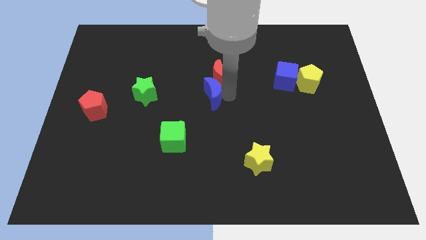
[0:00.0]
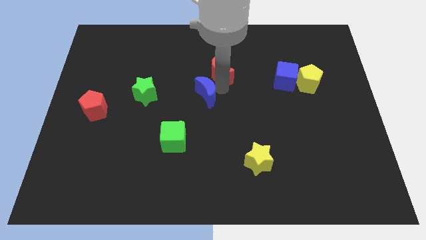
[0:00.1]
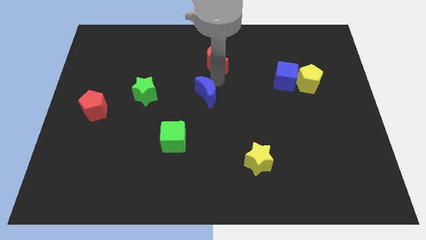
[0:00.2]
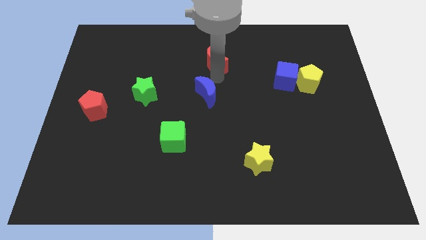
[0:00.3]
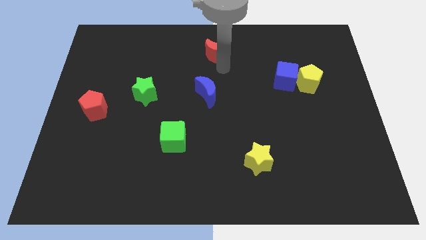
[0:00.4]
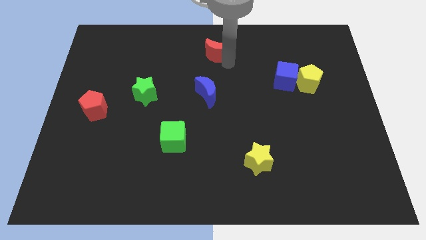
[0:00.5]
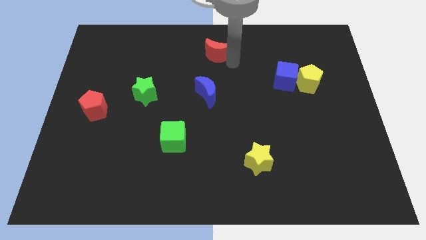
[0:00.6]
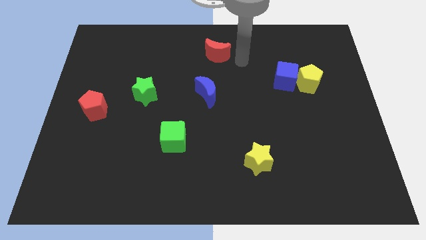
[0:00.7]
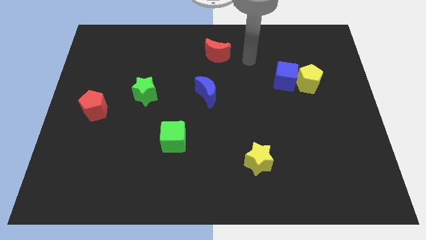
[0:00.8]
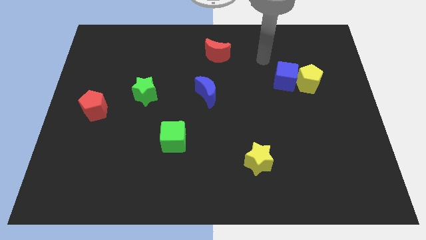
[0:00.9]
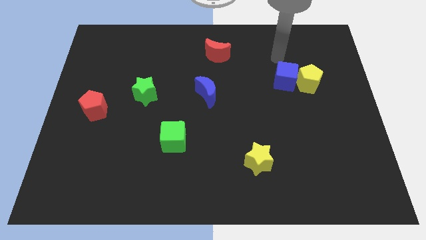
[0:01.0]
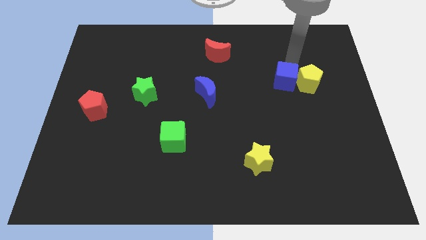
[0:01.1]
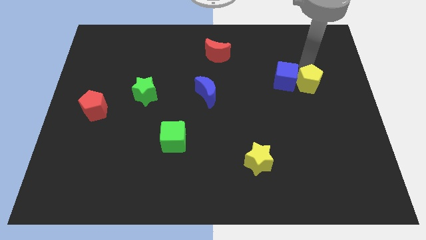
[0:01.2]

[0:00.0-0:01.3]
place the arm above the yellow pentagon

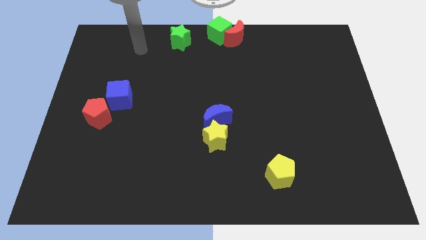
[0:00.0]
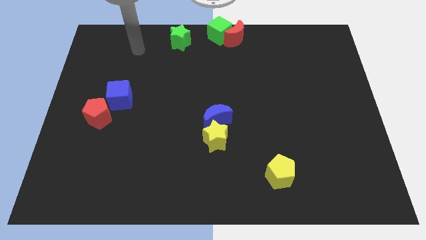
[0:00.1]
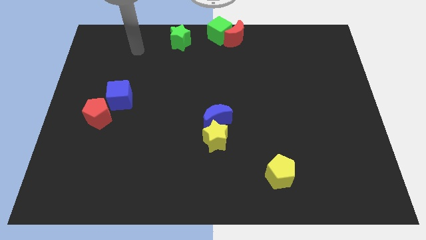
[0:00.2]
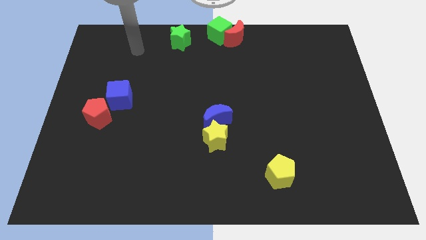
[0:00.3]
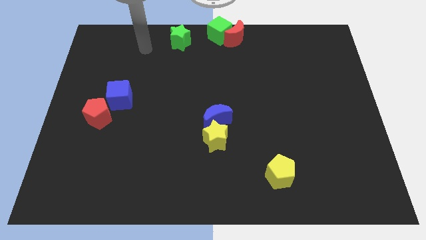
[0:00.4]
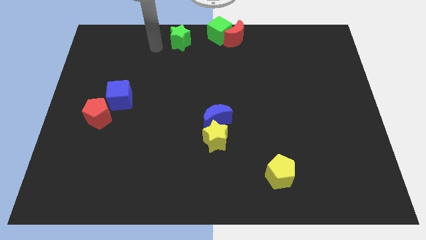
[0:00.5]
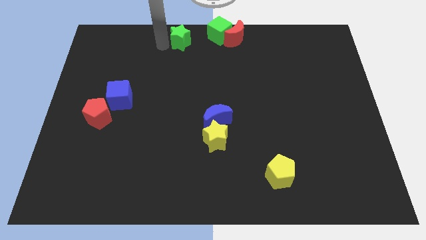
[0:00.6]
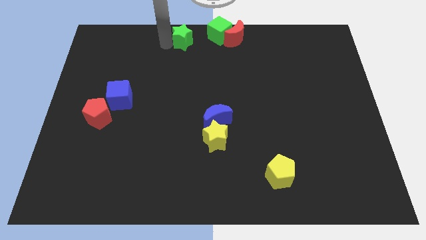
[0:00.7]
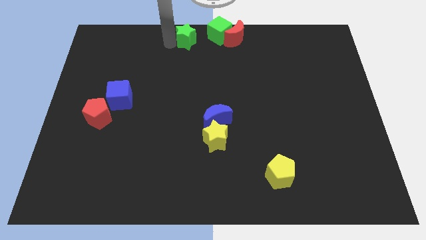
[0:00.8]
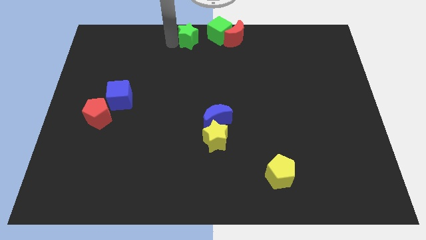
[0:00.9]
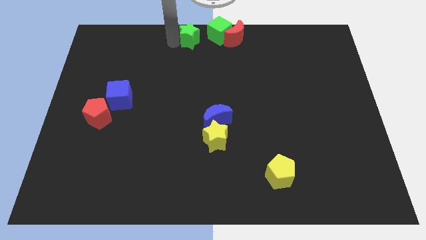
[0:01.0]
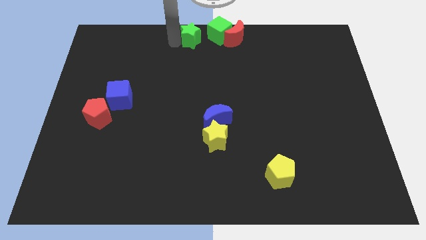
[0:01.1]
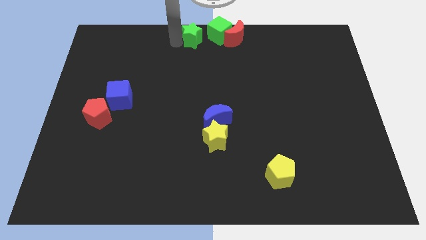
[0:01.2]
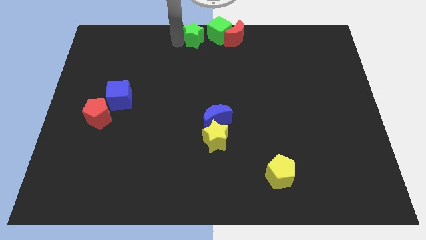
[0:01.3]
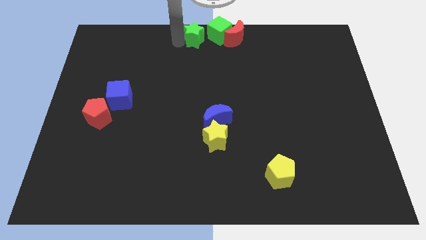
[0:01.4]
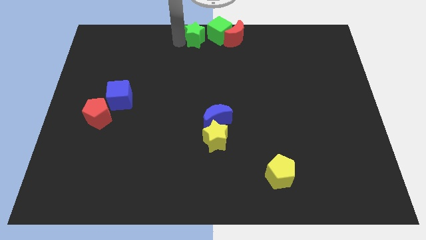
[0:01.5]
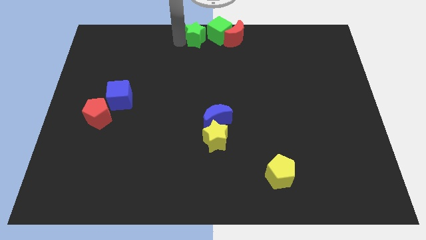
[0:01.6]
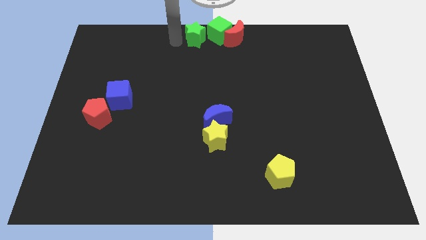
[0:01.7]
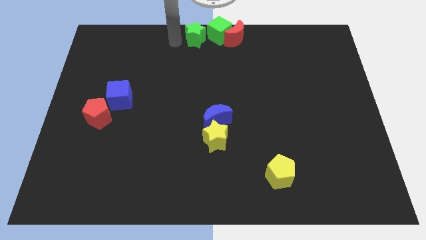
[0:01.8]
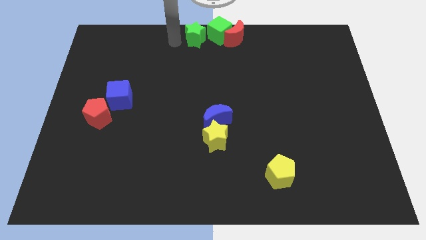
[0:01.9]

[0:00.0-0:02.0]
place the green star left to the green cube

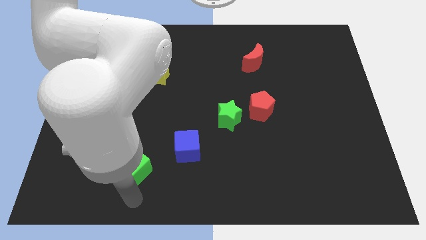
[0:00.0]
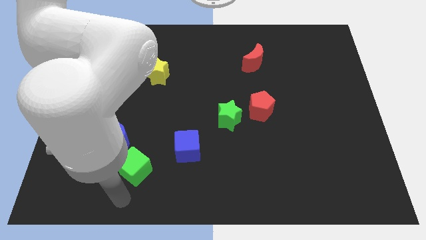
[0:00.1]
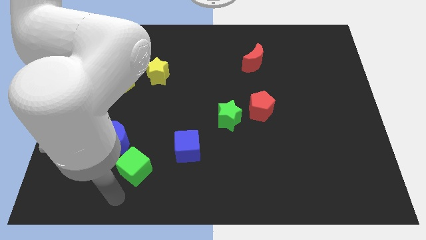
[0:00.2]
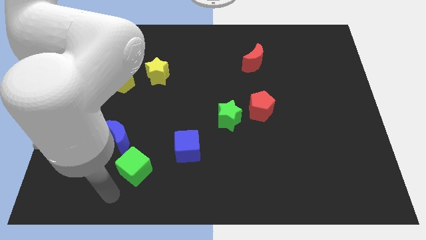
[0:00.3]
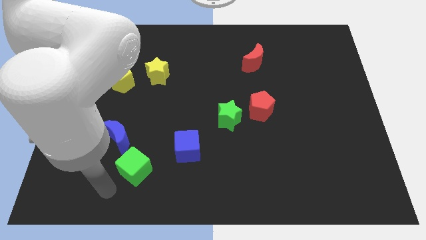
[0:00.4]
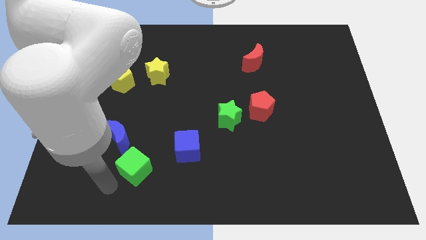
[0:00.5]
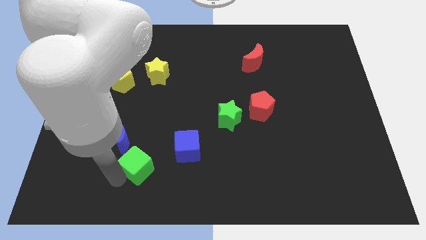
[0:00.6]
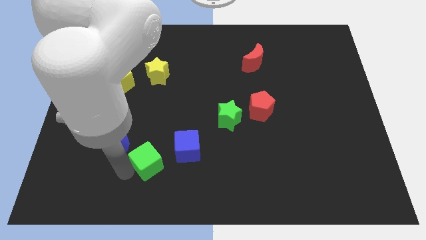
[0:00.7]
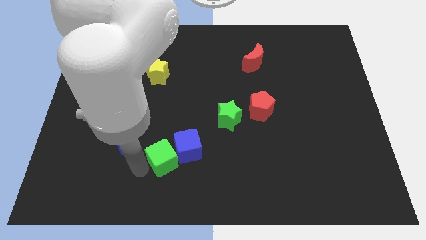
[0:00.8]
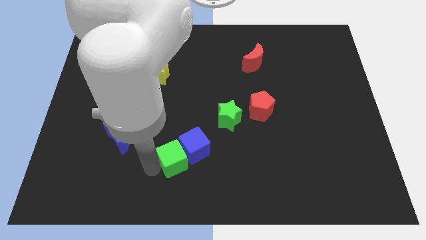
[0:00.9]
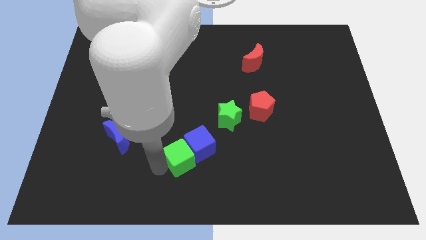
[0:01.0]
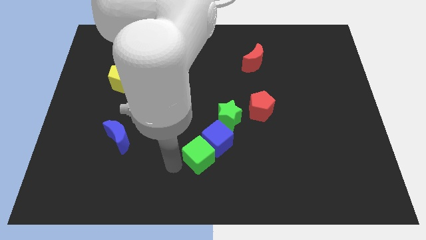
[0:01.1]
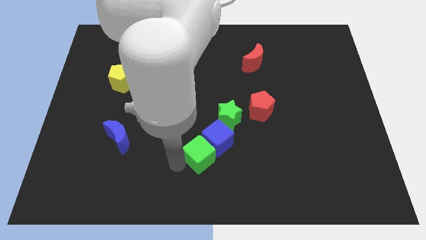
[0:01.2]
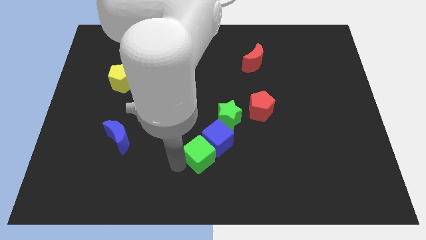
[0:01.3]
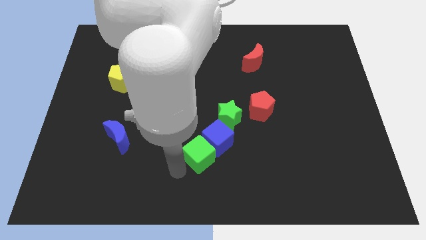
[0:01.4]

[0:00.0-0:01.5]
push the green cube into the blue cube

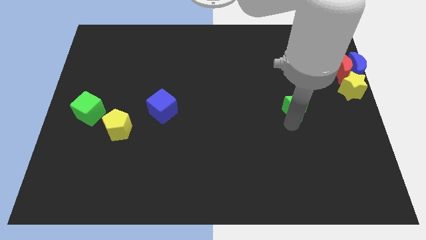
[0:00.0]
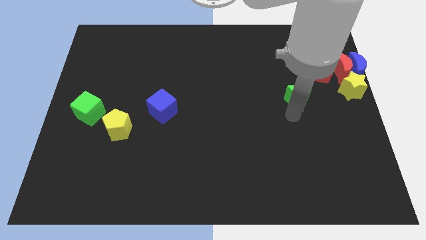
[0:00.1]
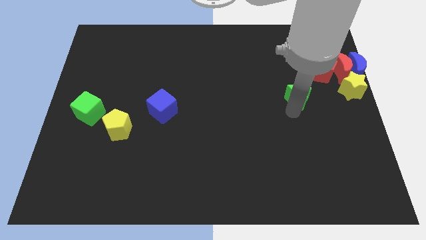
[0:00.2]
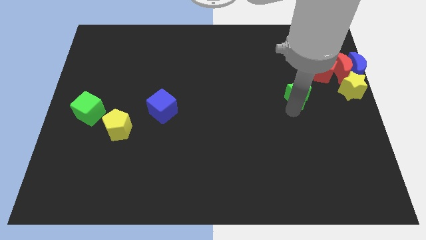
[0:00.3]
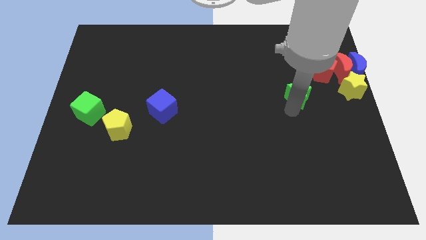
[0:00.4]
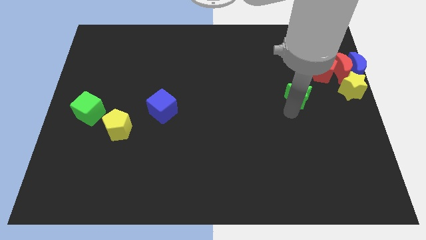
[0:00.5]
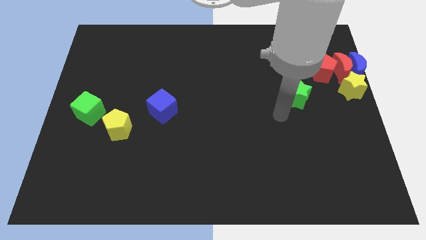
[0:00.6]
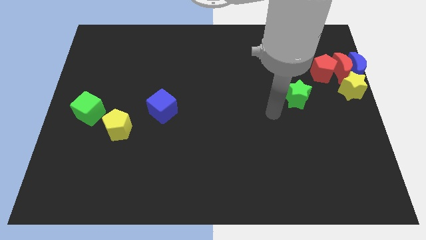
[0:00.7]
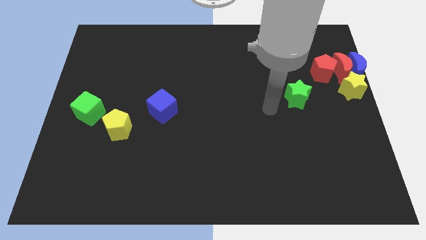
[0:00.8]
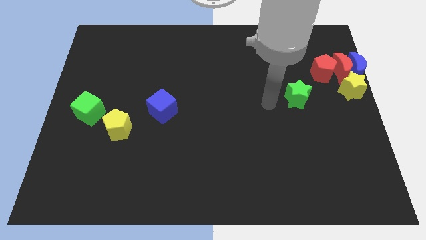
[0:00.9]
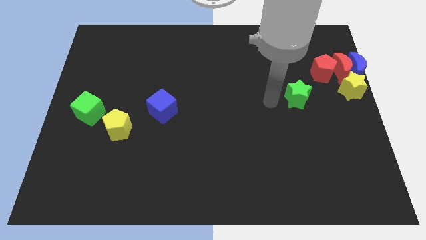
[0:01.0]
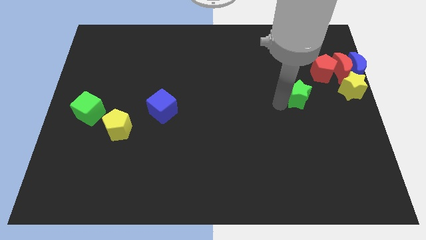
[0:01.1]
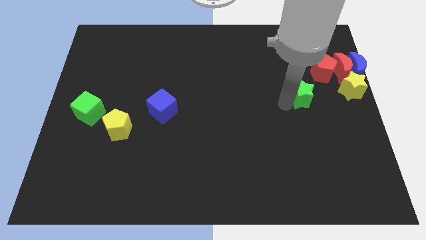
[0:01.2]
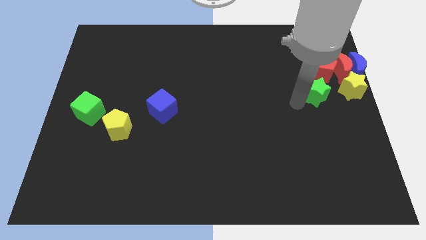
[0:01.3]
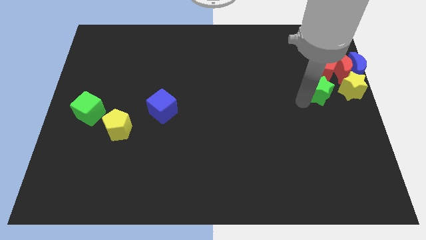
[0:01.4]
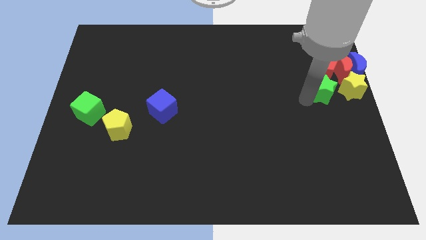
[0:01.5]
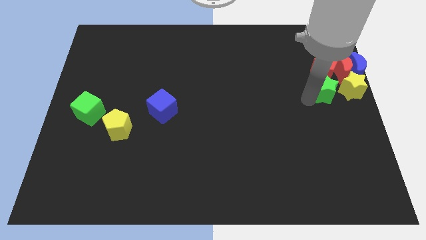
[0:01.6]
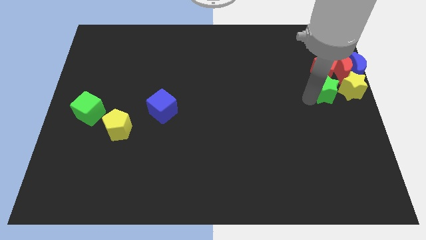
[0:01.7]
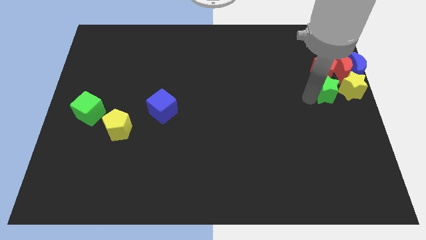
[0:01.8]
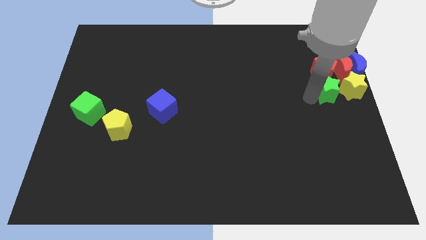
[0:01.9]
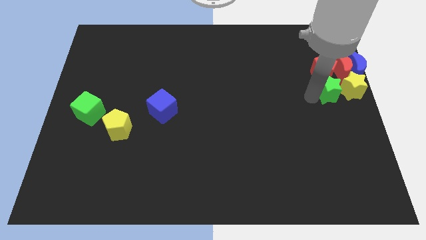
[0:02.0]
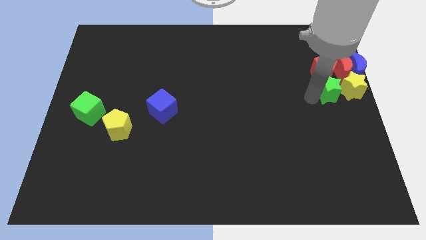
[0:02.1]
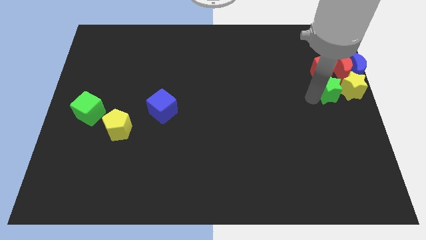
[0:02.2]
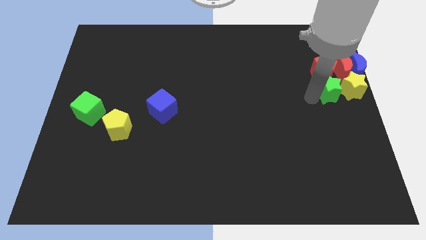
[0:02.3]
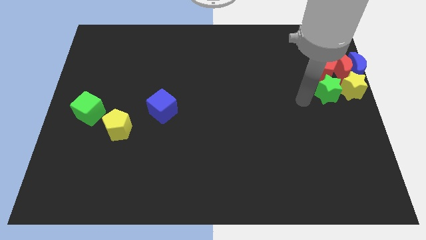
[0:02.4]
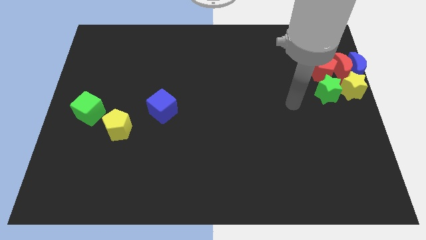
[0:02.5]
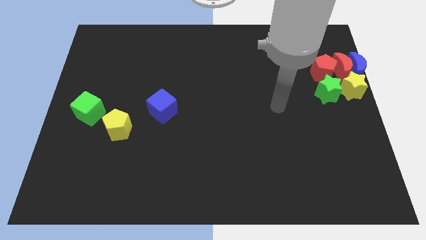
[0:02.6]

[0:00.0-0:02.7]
move green star close to the yellow star

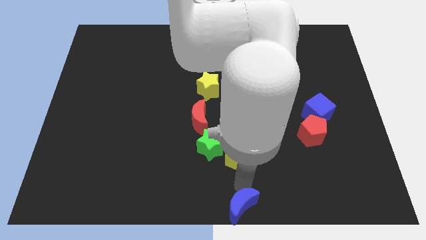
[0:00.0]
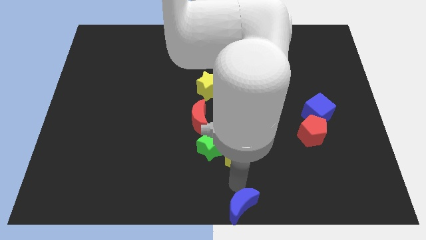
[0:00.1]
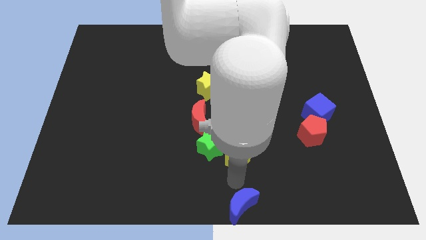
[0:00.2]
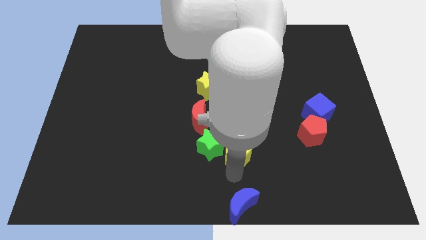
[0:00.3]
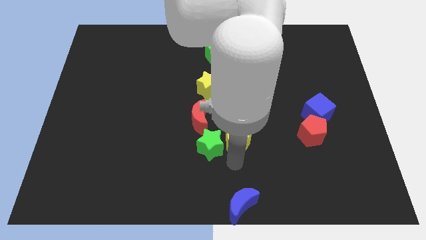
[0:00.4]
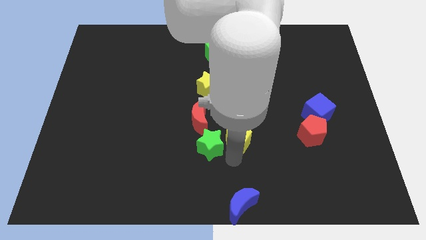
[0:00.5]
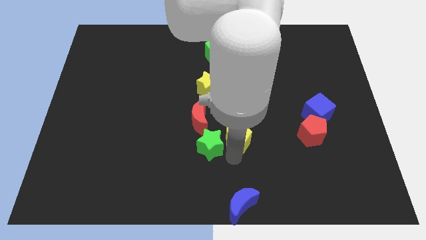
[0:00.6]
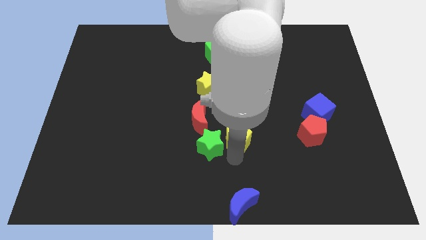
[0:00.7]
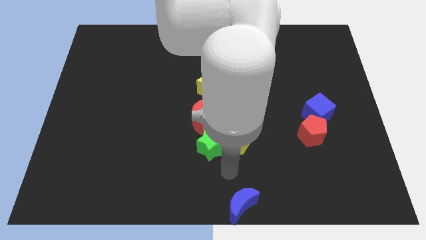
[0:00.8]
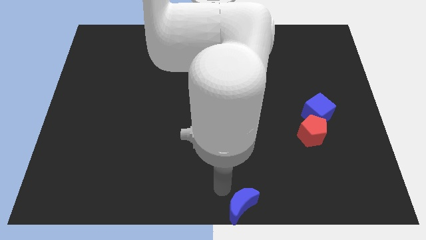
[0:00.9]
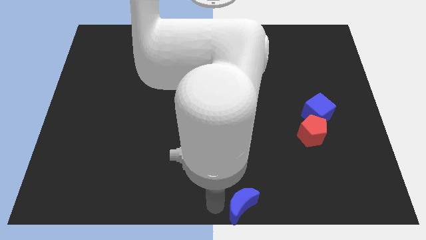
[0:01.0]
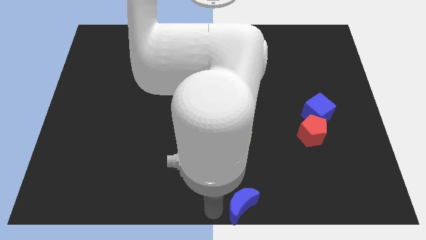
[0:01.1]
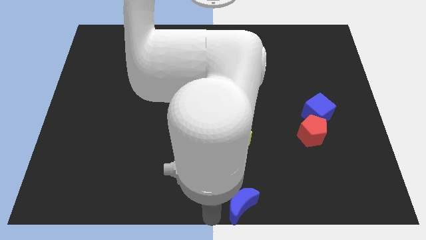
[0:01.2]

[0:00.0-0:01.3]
move the yellow pentagon to the right of the green star

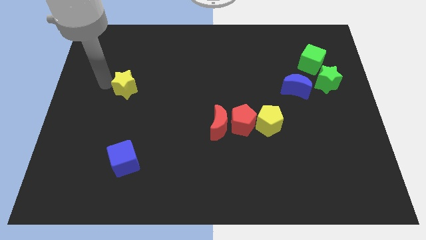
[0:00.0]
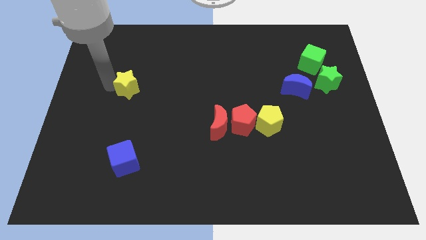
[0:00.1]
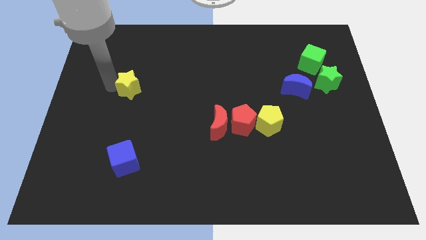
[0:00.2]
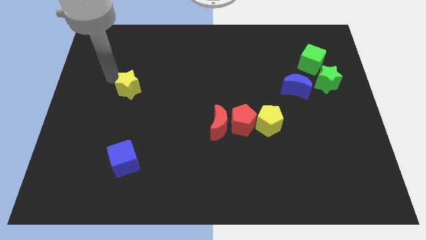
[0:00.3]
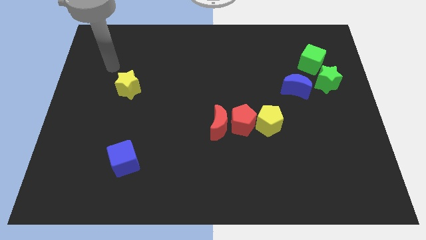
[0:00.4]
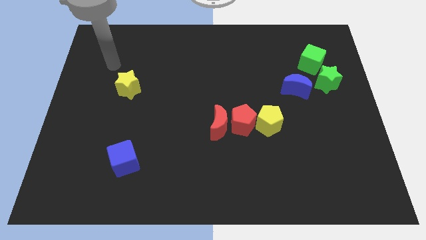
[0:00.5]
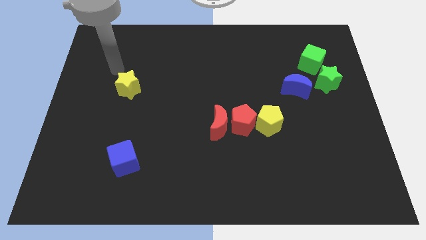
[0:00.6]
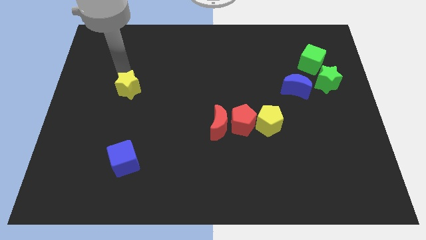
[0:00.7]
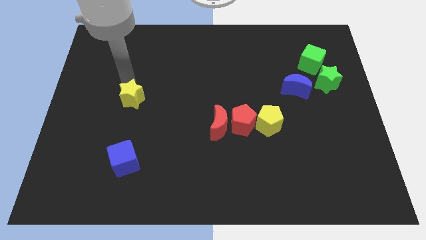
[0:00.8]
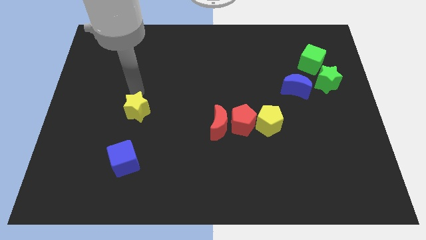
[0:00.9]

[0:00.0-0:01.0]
move yellow star towards blue cube
